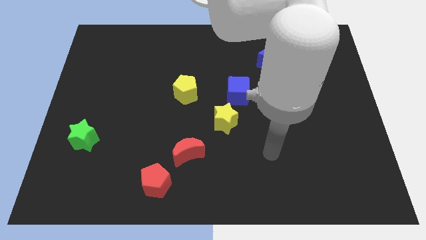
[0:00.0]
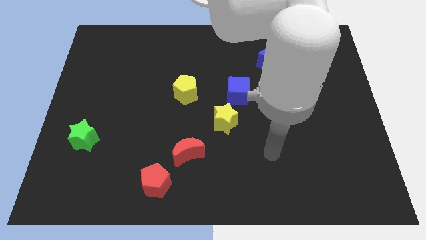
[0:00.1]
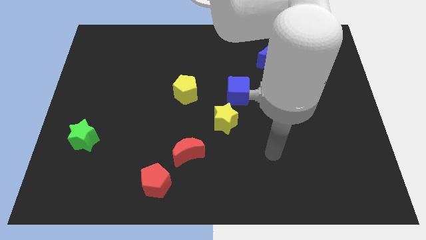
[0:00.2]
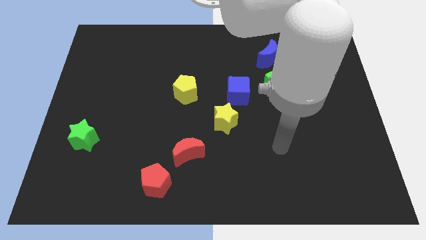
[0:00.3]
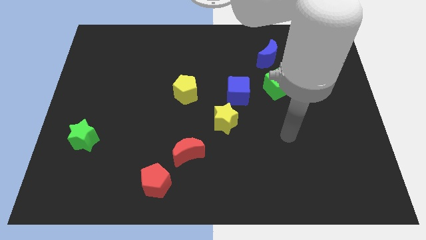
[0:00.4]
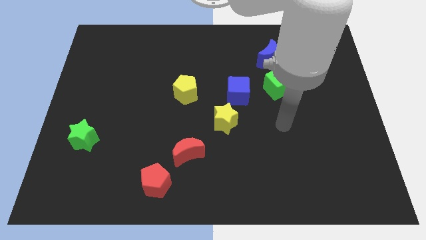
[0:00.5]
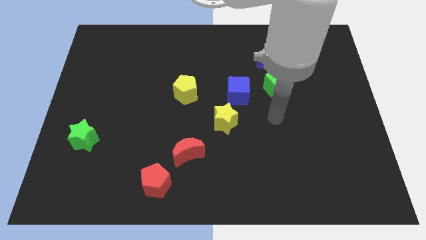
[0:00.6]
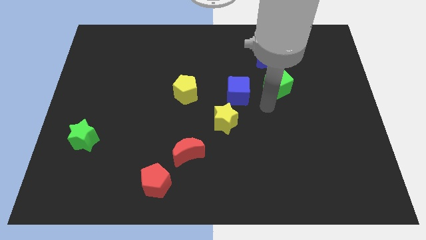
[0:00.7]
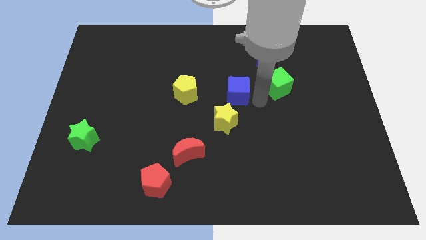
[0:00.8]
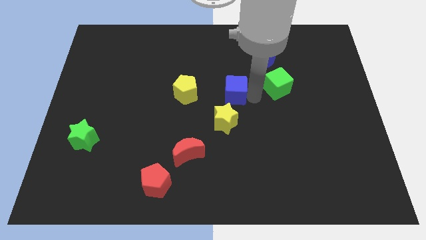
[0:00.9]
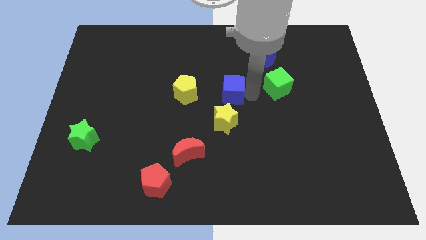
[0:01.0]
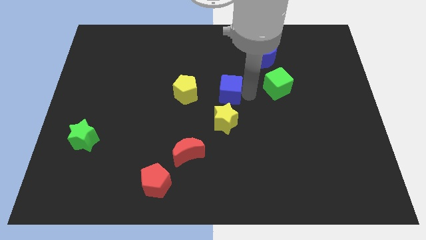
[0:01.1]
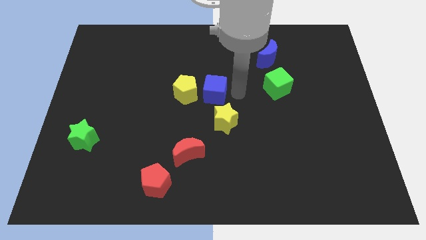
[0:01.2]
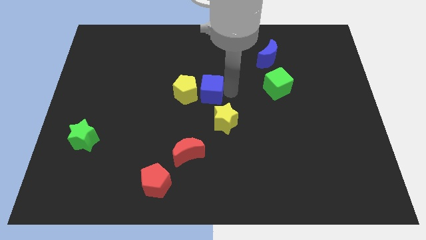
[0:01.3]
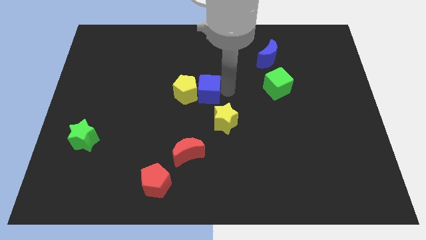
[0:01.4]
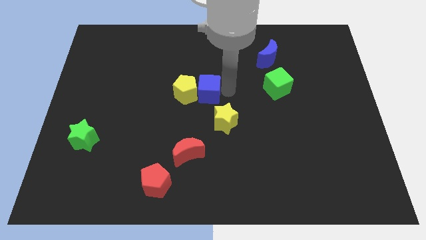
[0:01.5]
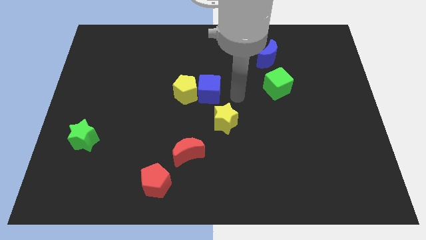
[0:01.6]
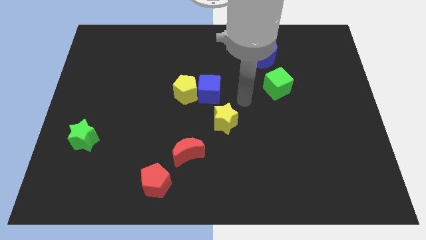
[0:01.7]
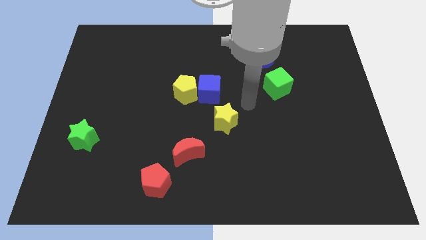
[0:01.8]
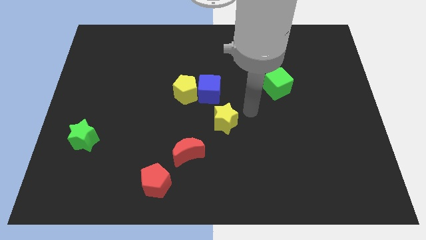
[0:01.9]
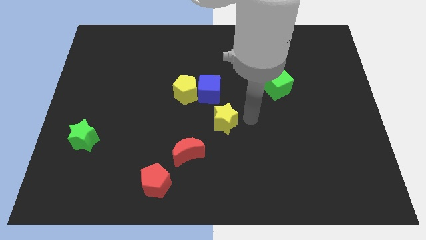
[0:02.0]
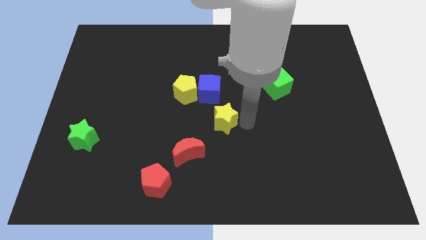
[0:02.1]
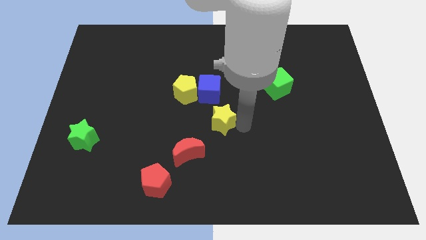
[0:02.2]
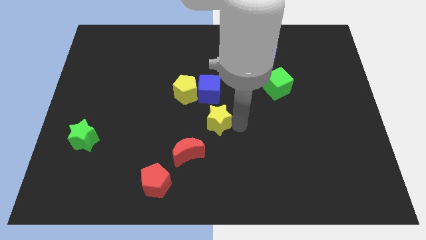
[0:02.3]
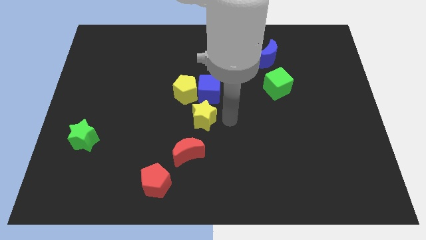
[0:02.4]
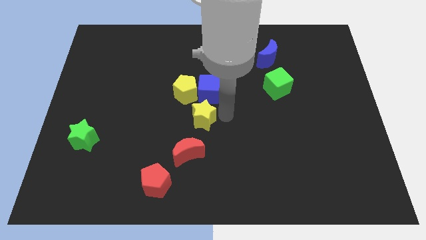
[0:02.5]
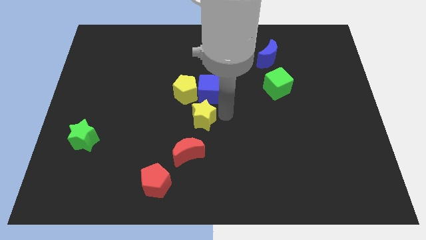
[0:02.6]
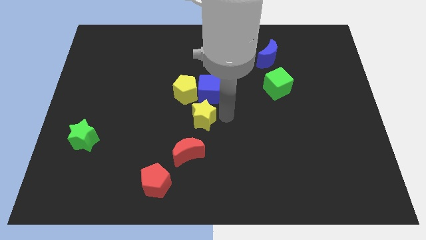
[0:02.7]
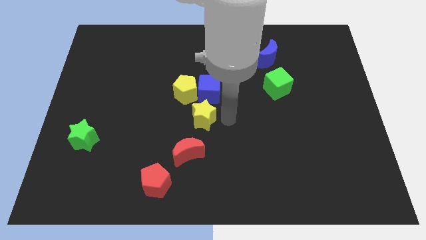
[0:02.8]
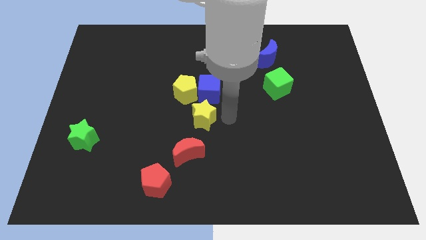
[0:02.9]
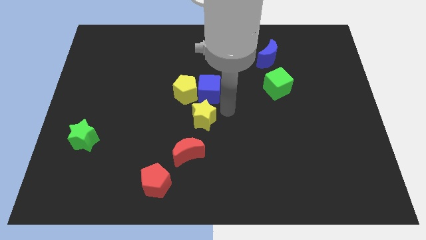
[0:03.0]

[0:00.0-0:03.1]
move the blue cube and yellow star to the right of yellow pentagon

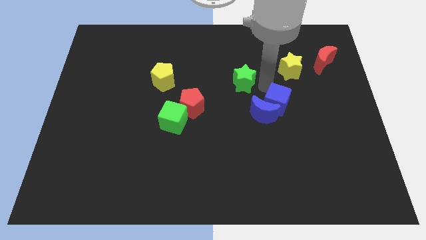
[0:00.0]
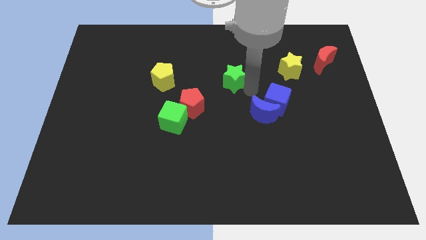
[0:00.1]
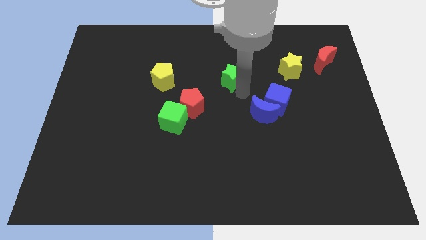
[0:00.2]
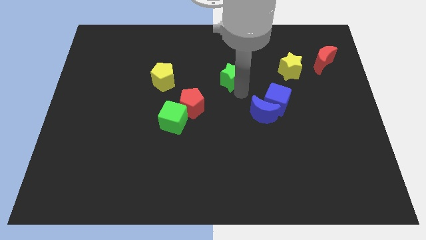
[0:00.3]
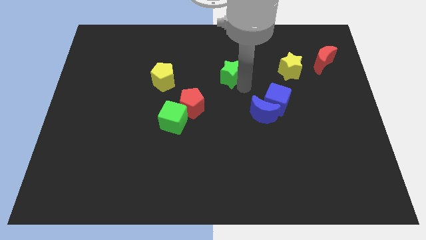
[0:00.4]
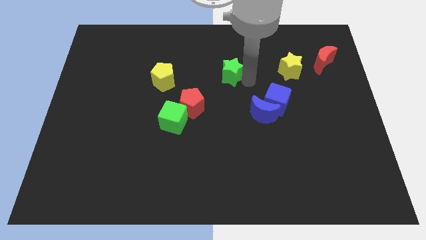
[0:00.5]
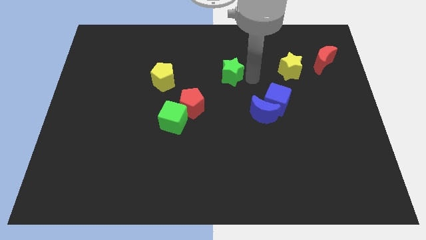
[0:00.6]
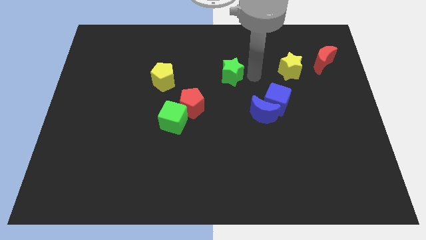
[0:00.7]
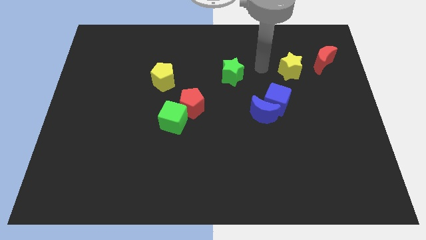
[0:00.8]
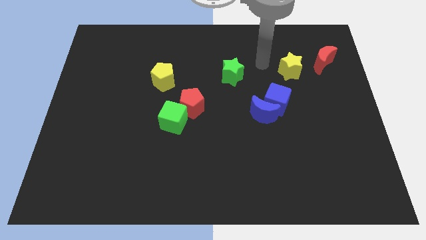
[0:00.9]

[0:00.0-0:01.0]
place the green star in between the yellow star and yellow pentagon

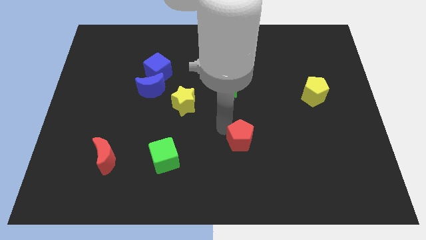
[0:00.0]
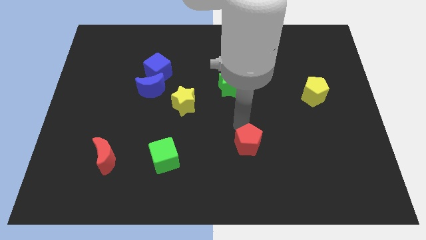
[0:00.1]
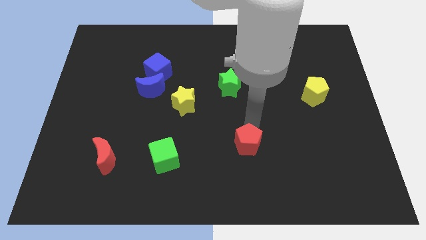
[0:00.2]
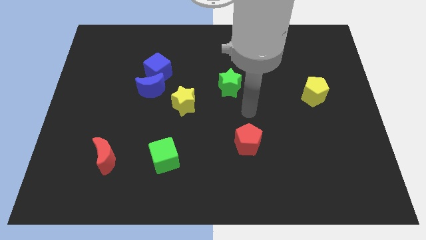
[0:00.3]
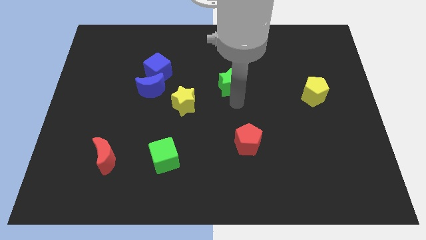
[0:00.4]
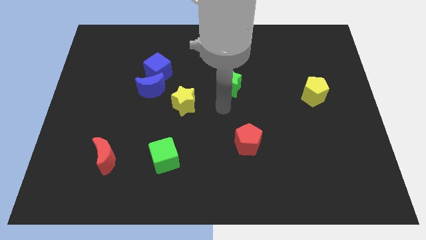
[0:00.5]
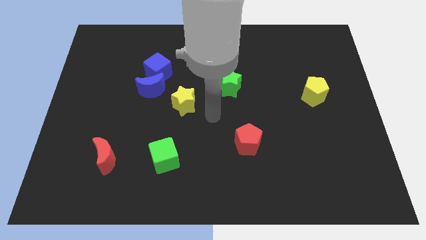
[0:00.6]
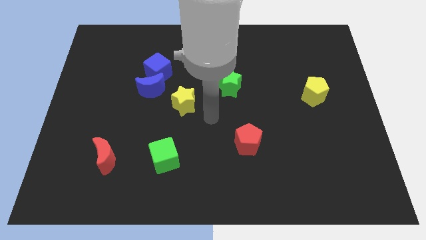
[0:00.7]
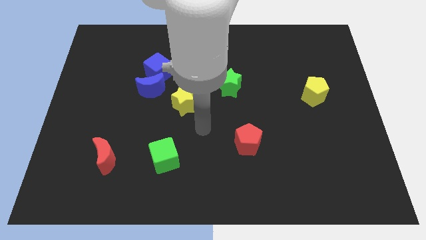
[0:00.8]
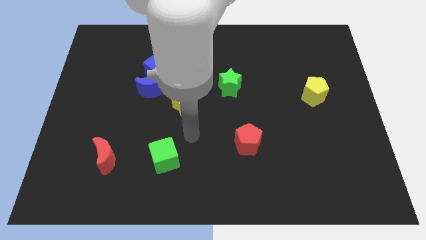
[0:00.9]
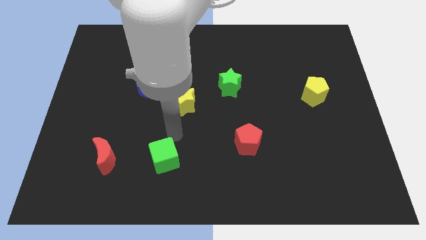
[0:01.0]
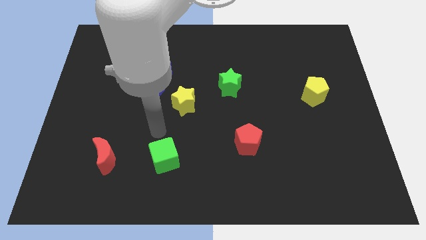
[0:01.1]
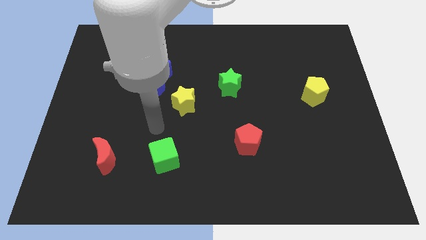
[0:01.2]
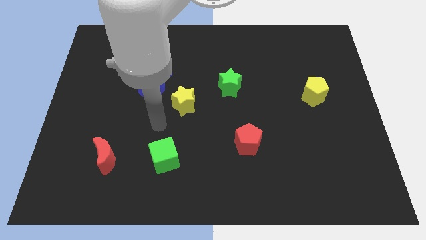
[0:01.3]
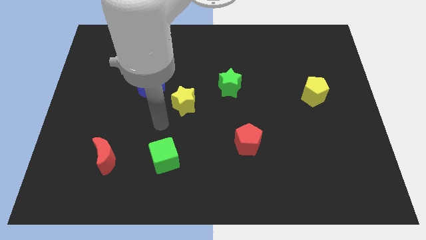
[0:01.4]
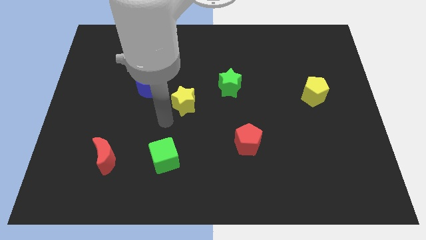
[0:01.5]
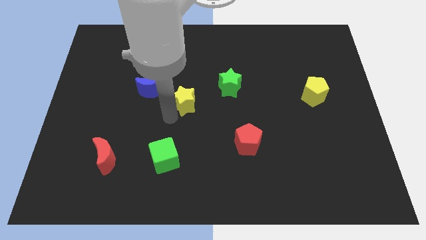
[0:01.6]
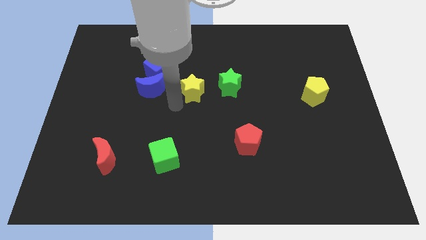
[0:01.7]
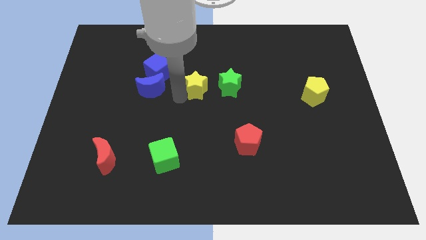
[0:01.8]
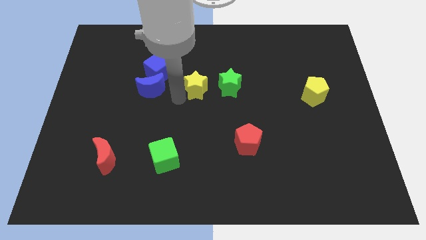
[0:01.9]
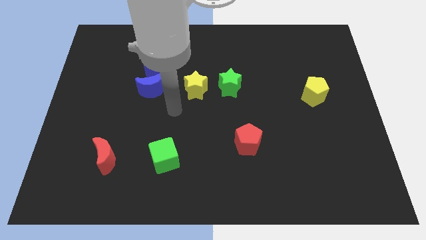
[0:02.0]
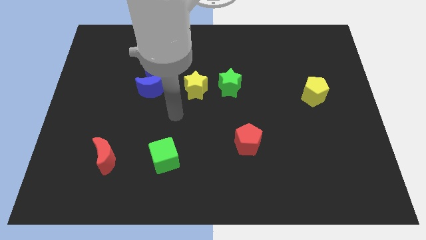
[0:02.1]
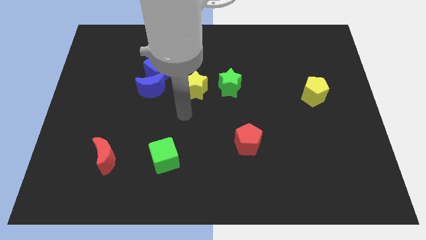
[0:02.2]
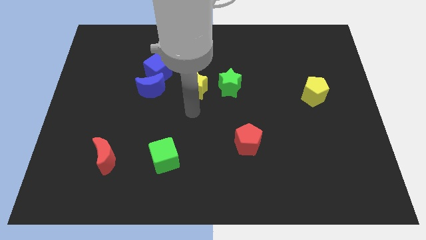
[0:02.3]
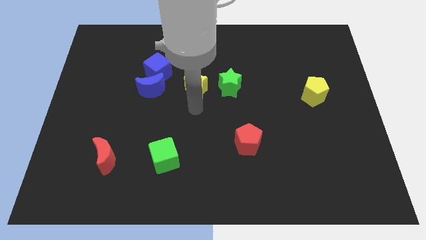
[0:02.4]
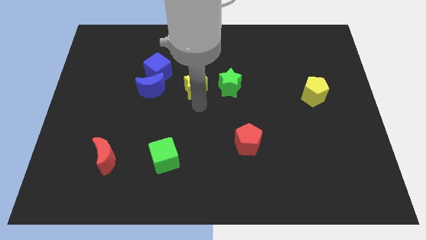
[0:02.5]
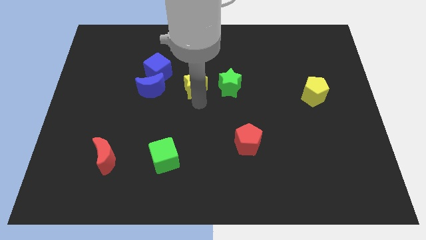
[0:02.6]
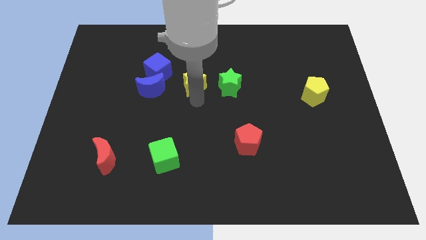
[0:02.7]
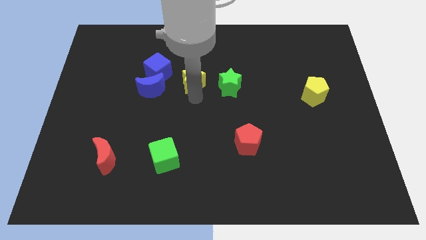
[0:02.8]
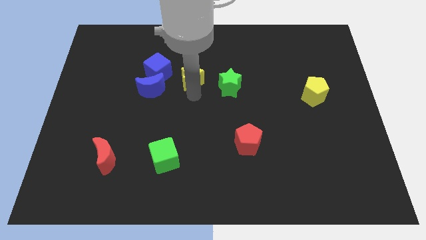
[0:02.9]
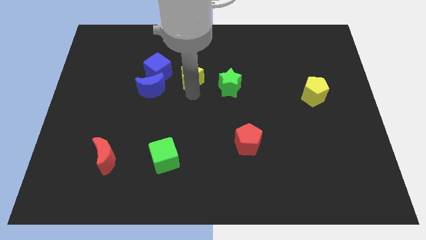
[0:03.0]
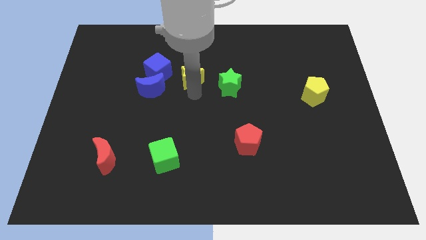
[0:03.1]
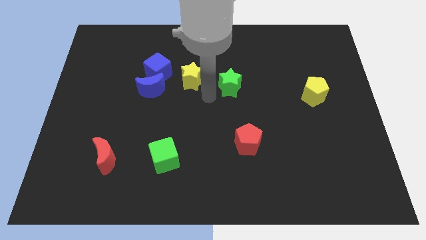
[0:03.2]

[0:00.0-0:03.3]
place the yellow star in between the blue cube and green star

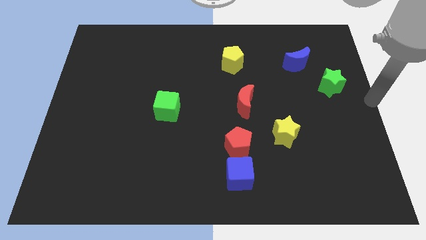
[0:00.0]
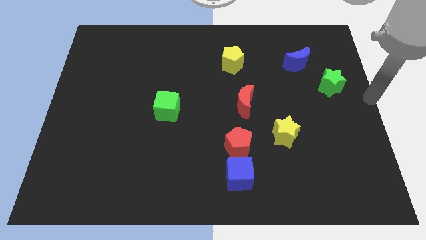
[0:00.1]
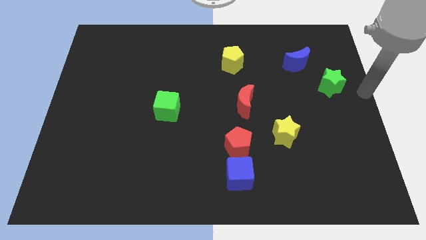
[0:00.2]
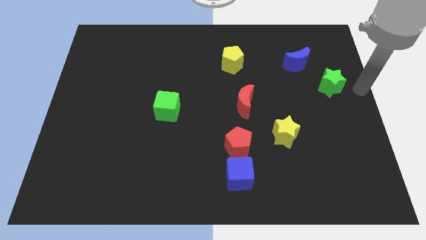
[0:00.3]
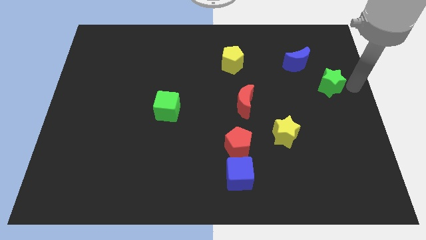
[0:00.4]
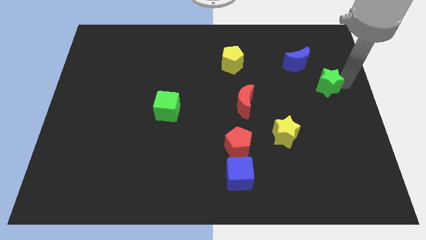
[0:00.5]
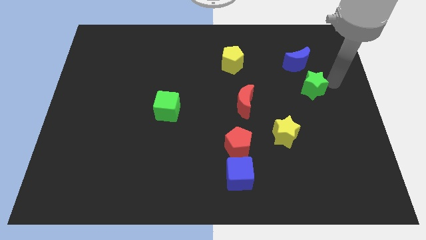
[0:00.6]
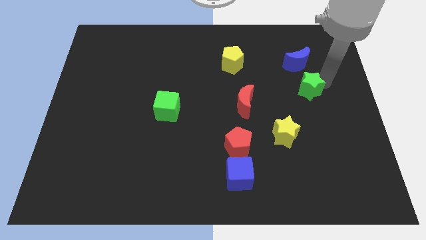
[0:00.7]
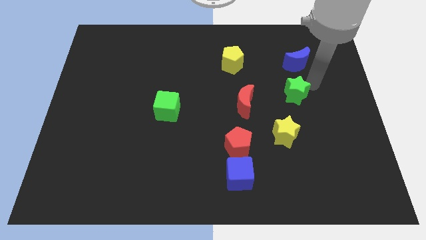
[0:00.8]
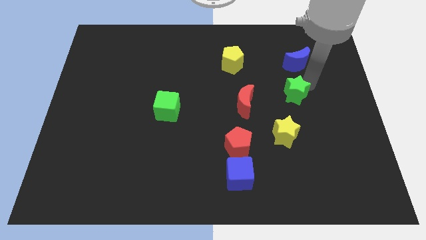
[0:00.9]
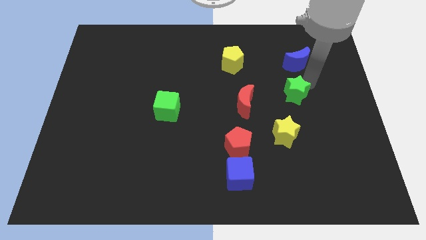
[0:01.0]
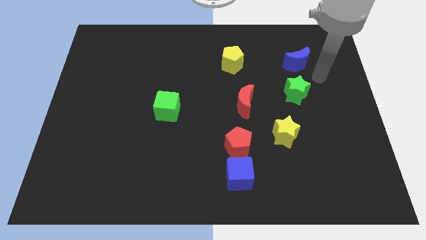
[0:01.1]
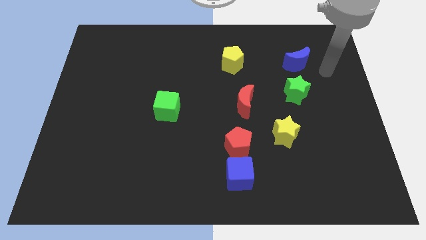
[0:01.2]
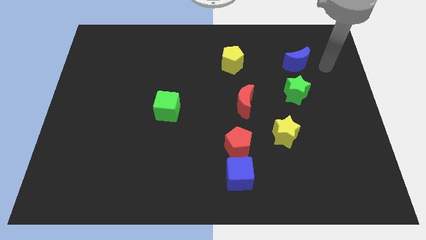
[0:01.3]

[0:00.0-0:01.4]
slide the green star to the bottom of the blue moon

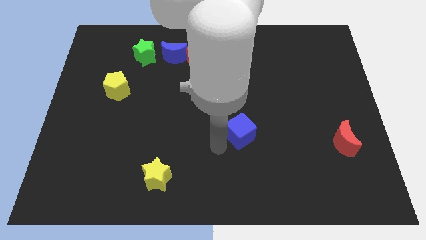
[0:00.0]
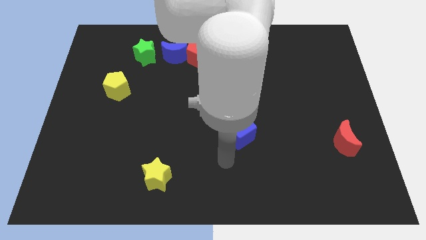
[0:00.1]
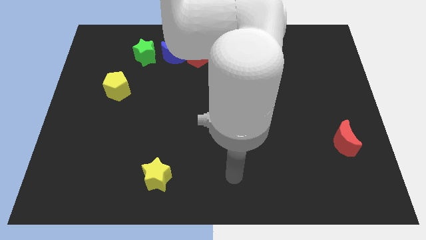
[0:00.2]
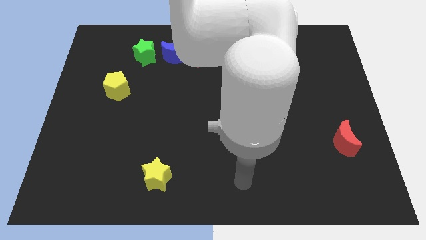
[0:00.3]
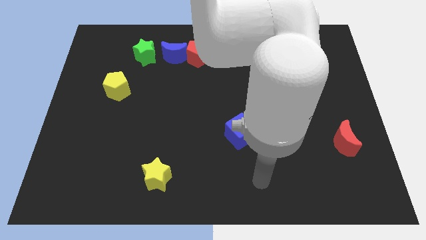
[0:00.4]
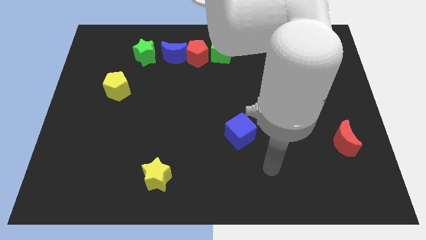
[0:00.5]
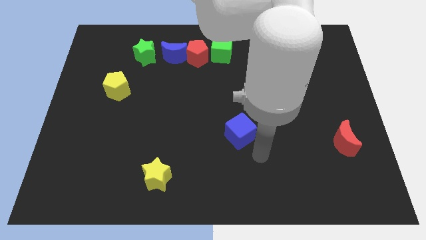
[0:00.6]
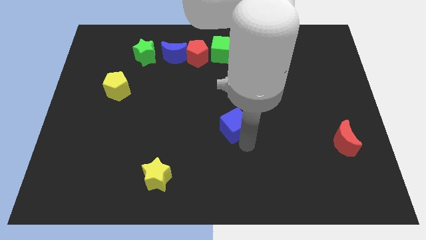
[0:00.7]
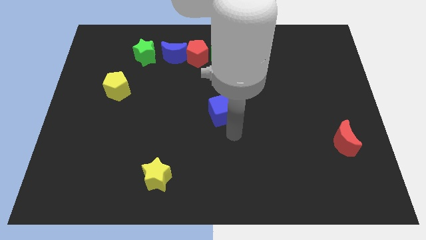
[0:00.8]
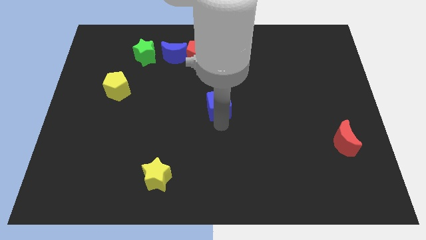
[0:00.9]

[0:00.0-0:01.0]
push the blue cube towards the center of the board
